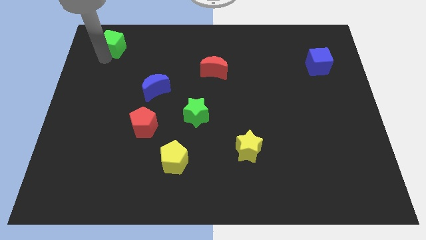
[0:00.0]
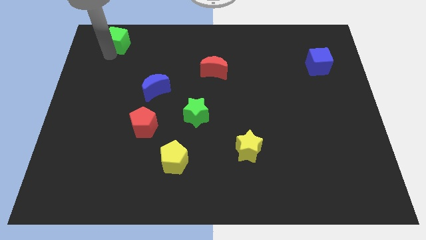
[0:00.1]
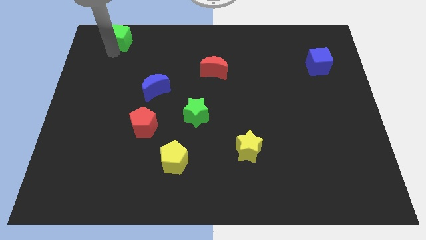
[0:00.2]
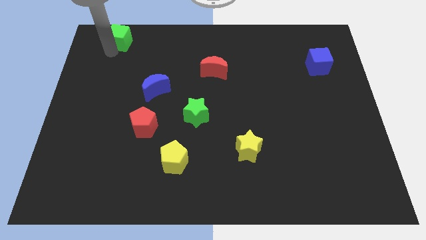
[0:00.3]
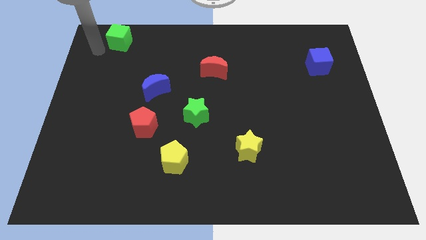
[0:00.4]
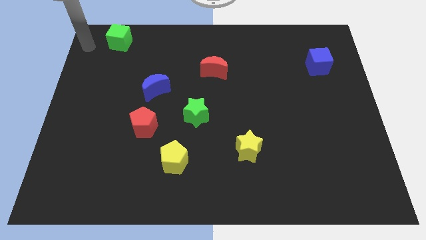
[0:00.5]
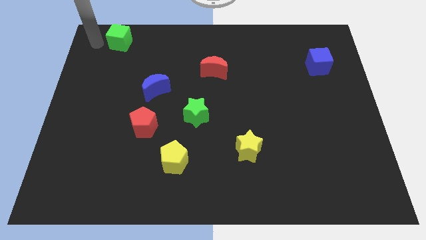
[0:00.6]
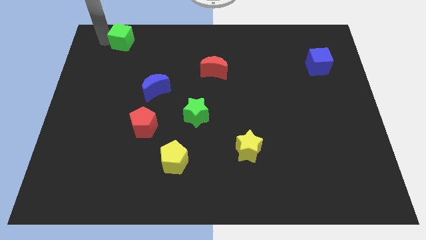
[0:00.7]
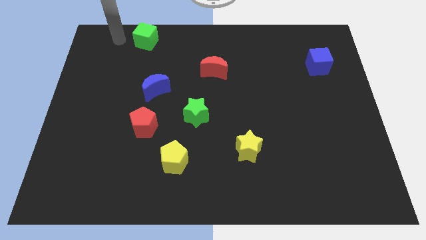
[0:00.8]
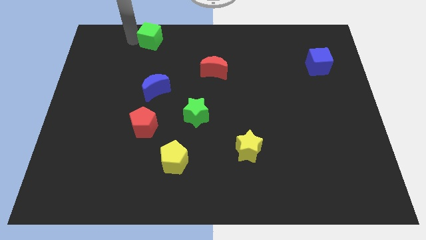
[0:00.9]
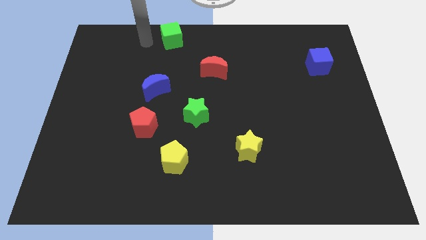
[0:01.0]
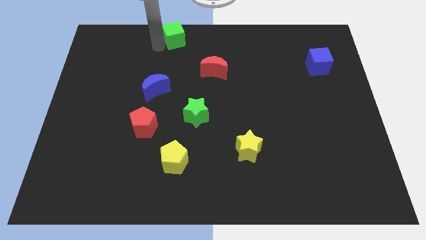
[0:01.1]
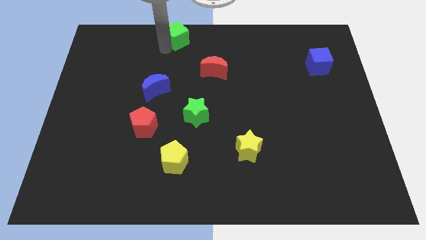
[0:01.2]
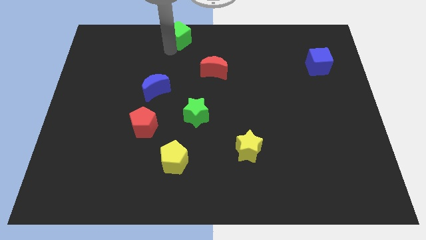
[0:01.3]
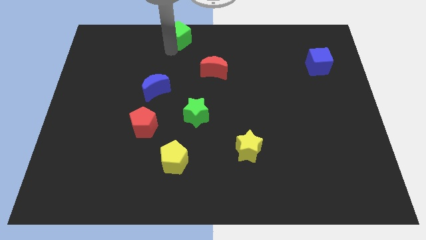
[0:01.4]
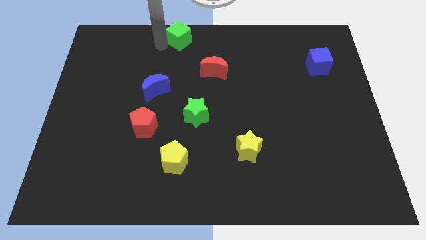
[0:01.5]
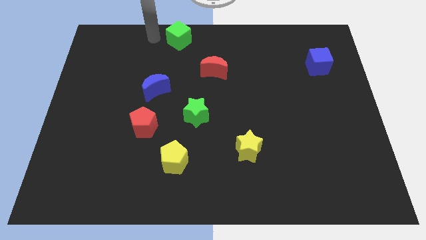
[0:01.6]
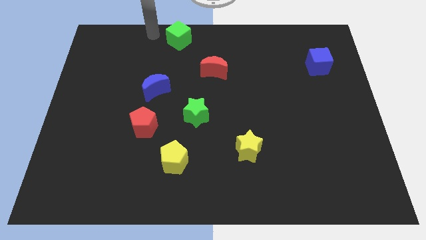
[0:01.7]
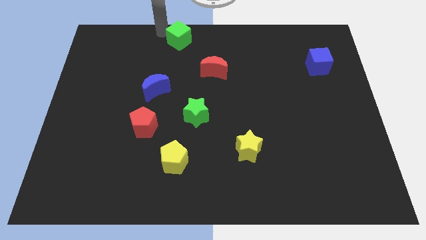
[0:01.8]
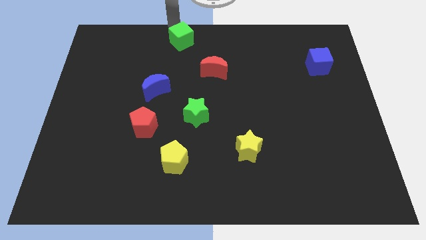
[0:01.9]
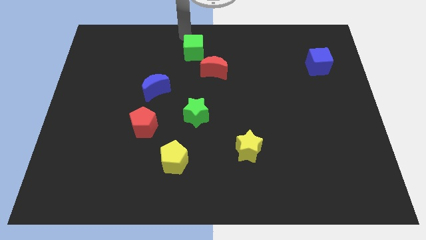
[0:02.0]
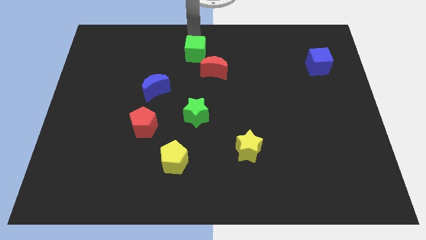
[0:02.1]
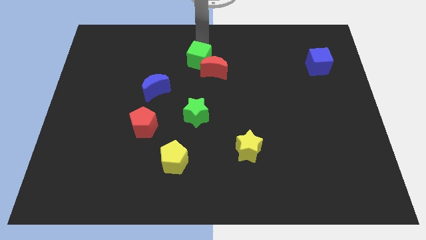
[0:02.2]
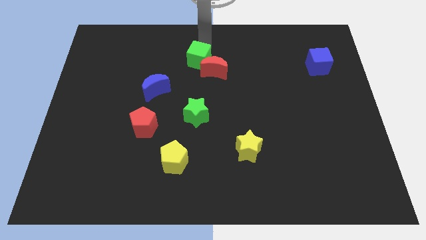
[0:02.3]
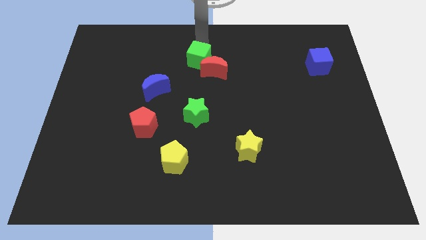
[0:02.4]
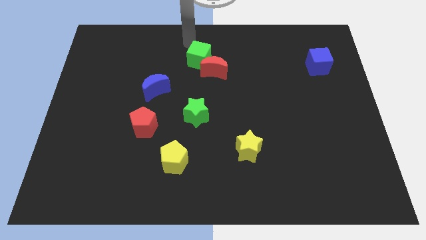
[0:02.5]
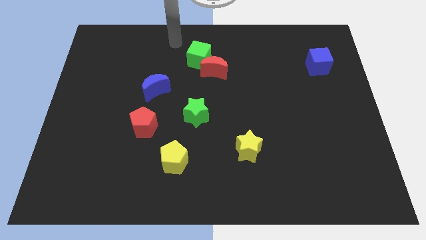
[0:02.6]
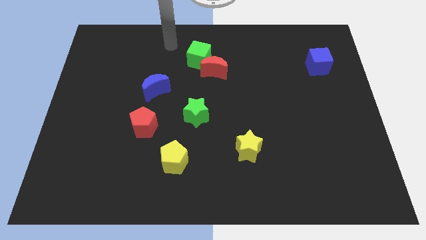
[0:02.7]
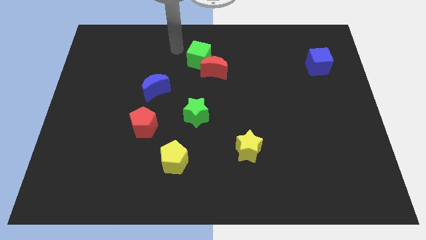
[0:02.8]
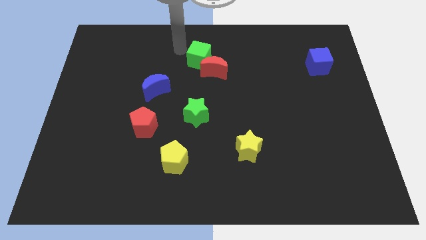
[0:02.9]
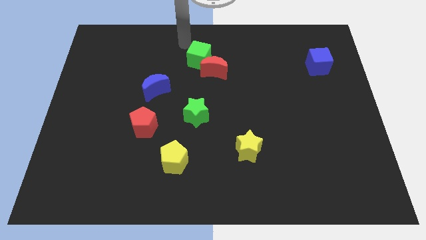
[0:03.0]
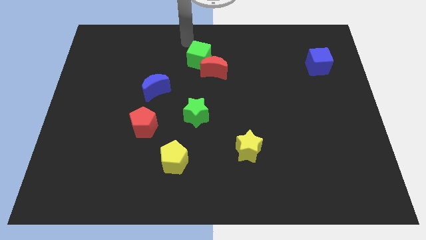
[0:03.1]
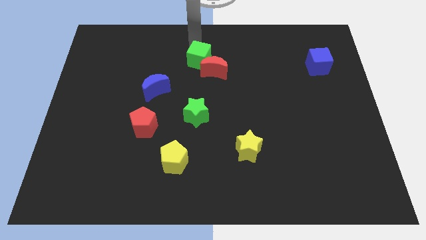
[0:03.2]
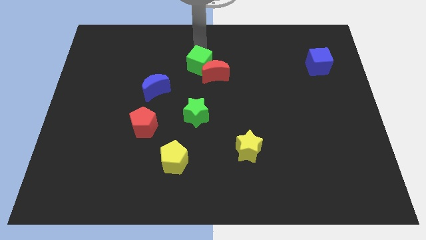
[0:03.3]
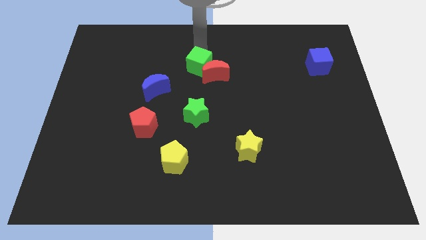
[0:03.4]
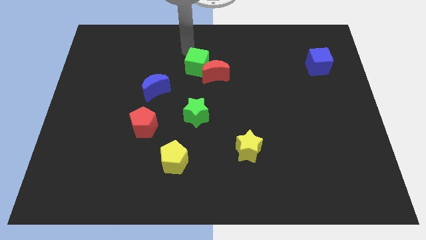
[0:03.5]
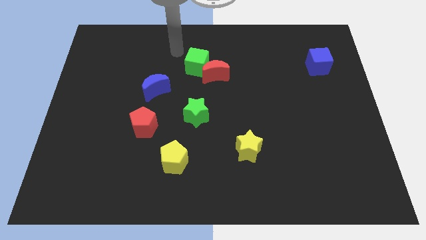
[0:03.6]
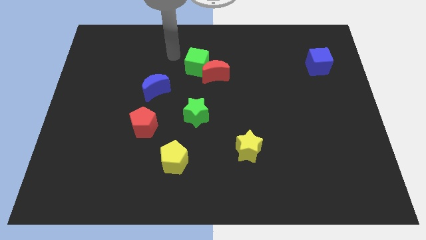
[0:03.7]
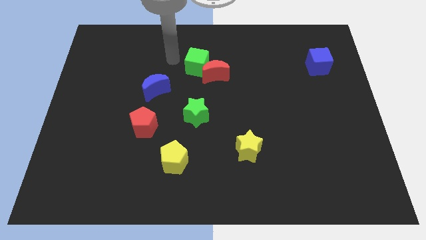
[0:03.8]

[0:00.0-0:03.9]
move the green cube into the red crescent

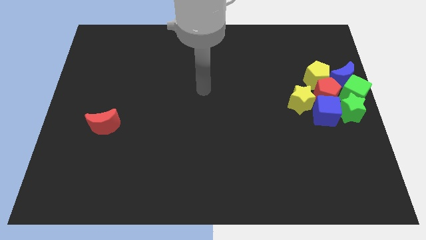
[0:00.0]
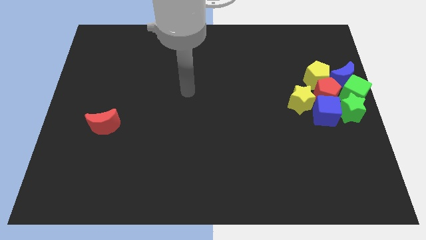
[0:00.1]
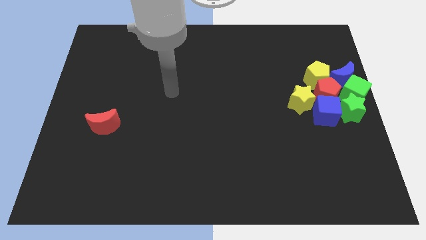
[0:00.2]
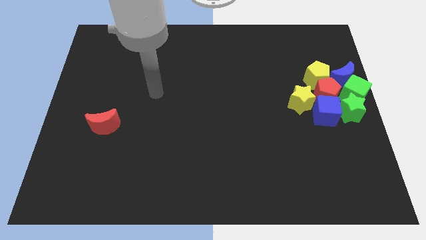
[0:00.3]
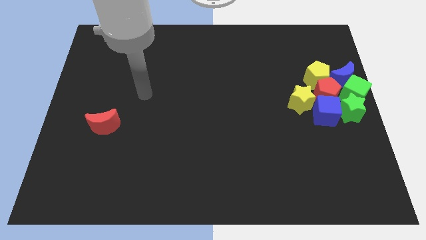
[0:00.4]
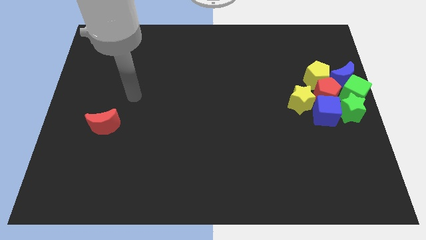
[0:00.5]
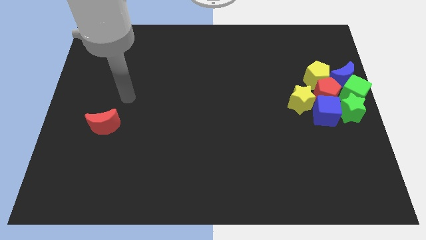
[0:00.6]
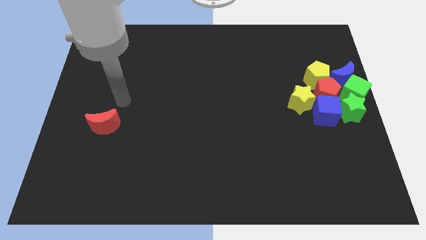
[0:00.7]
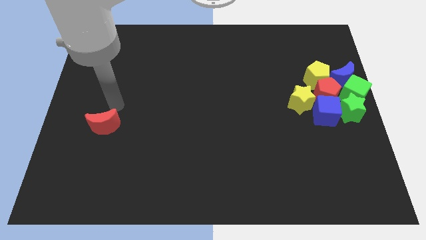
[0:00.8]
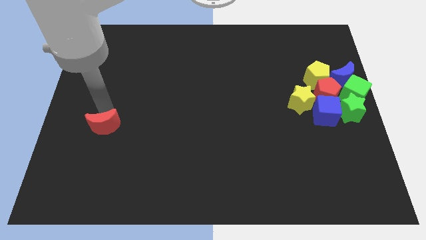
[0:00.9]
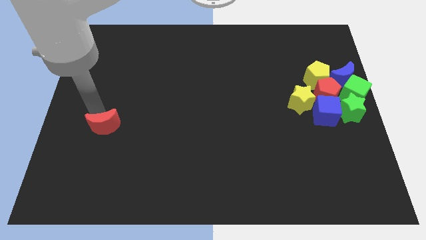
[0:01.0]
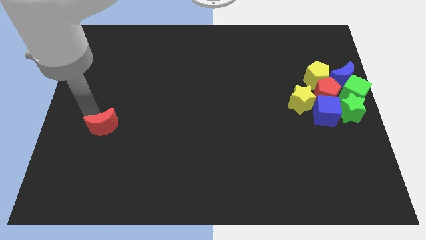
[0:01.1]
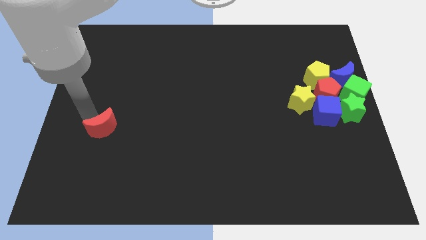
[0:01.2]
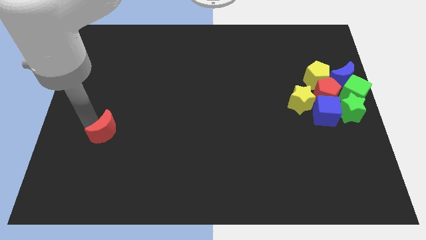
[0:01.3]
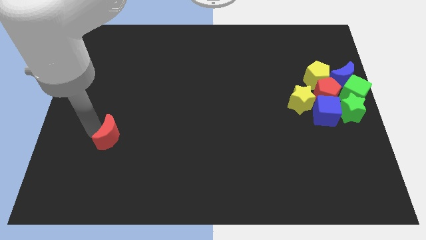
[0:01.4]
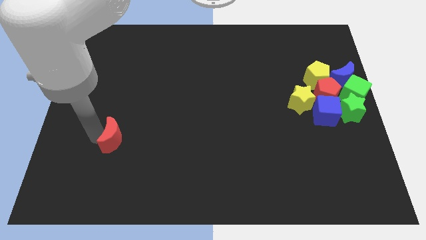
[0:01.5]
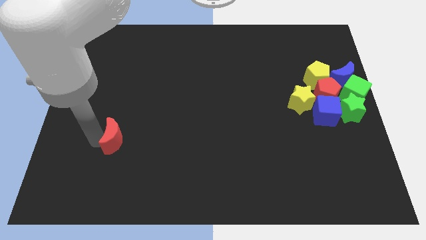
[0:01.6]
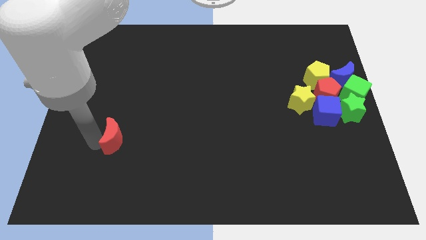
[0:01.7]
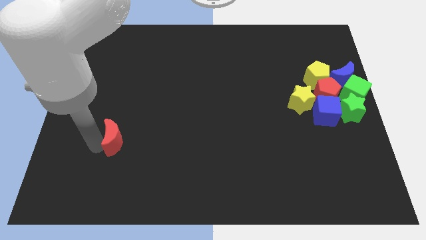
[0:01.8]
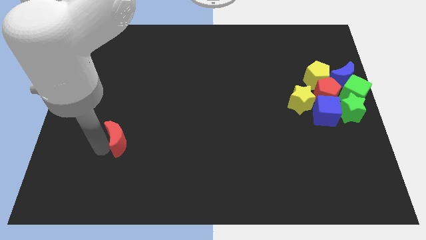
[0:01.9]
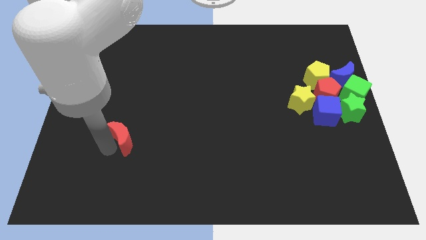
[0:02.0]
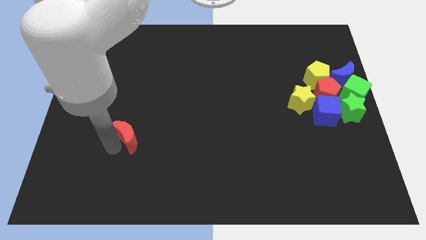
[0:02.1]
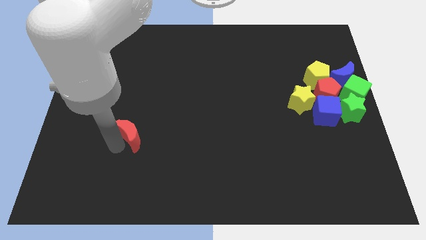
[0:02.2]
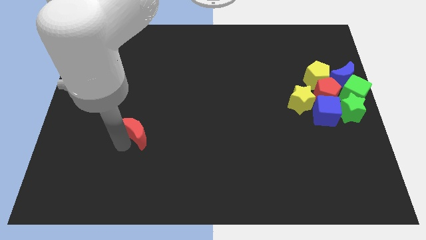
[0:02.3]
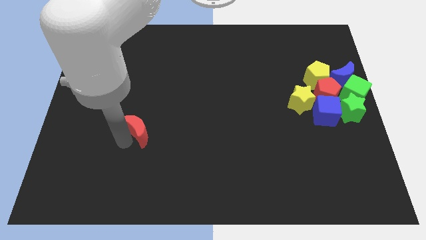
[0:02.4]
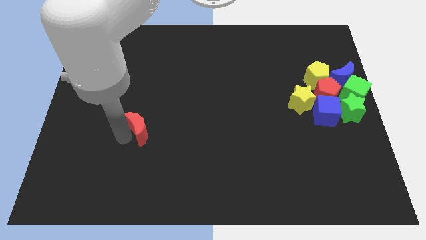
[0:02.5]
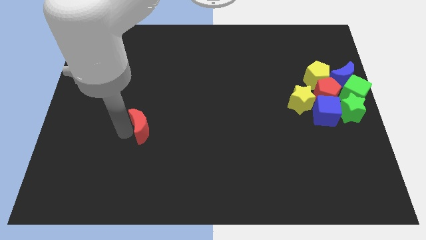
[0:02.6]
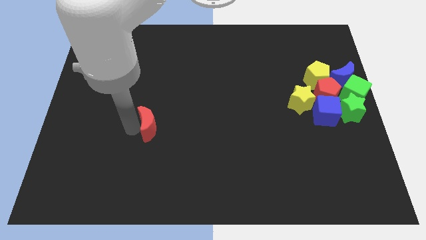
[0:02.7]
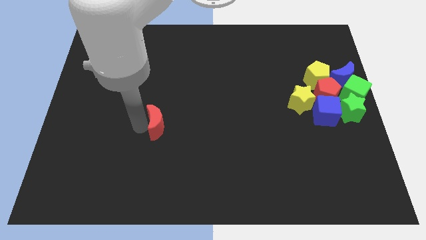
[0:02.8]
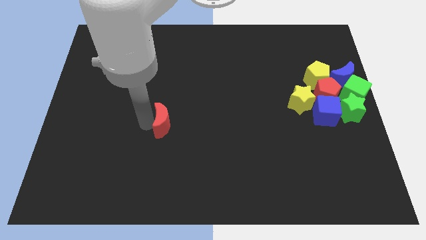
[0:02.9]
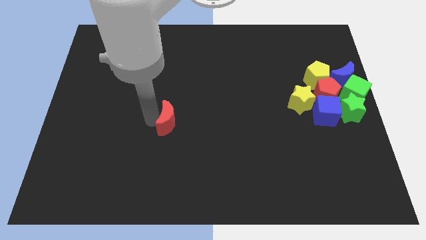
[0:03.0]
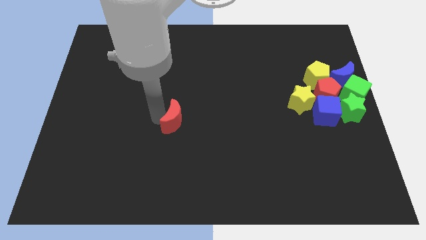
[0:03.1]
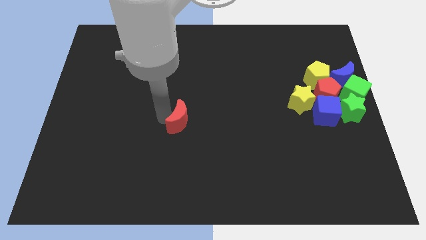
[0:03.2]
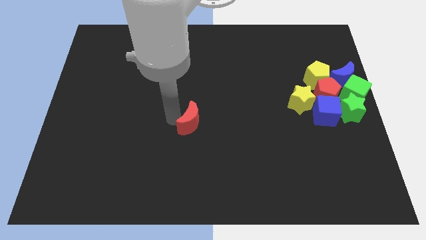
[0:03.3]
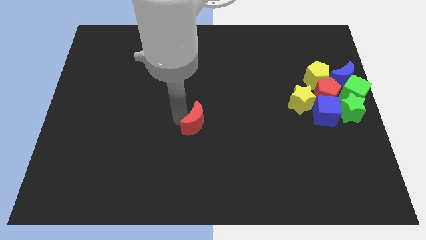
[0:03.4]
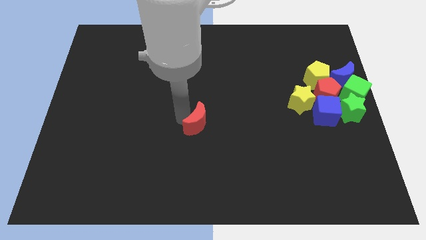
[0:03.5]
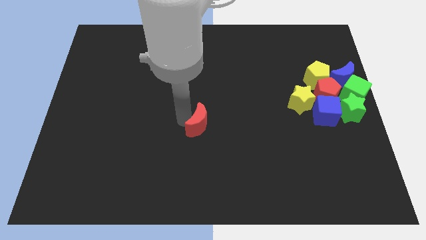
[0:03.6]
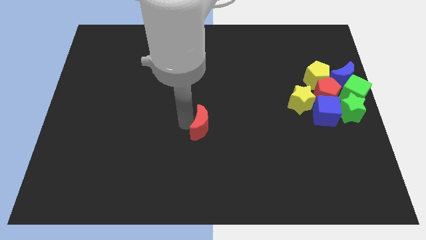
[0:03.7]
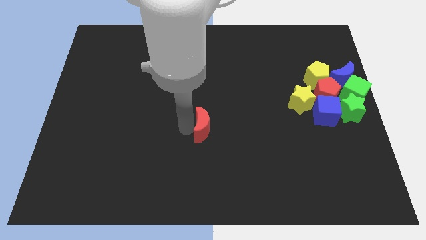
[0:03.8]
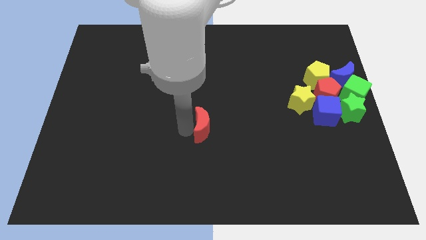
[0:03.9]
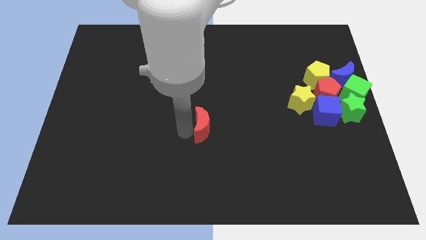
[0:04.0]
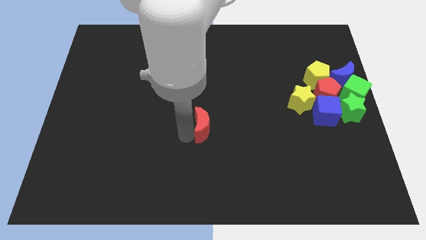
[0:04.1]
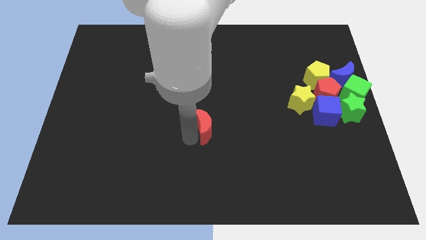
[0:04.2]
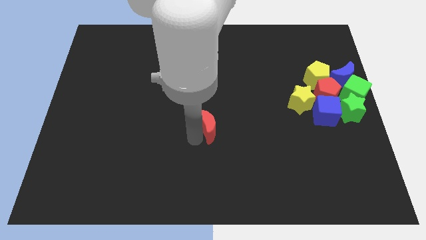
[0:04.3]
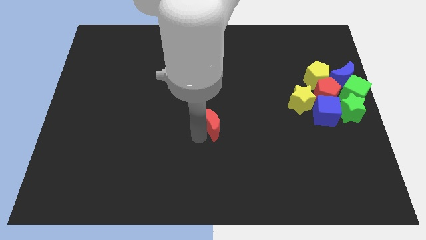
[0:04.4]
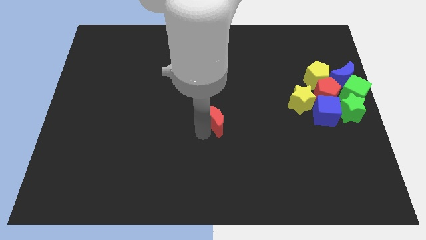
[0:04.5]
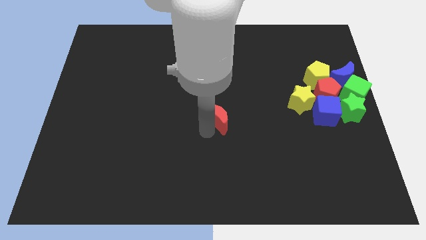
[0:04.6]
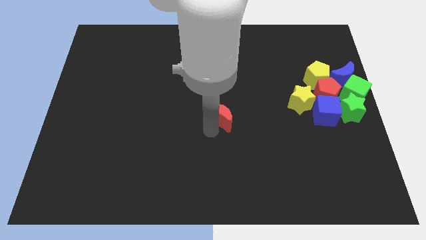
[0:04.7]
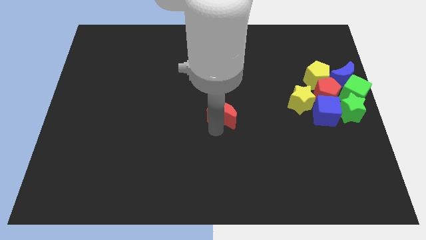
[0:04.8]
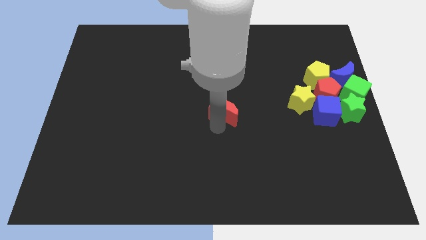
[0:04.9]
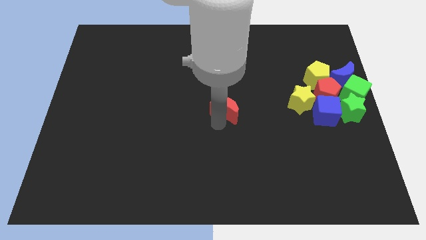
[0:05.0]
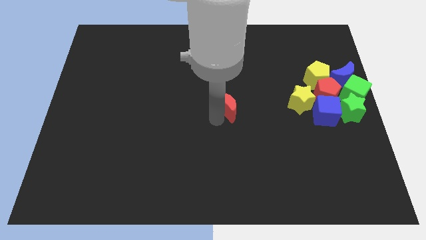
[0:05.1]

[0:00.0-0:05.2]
push the red crescent to the center of the board
